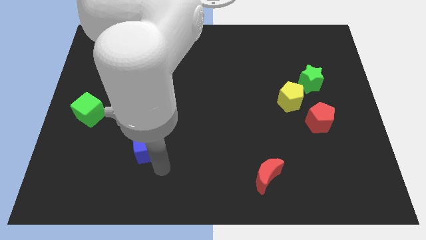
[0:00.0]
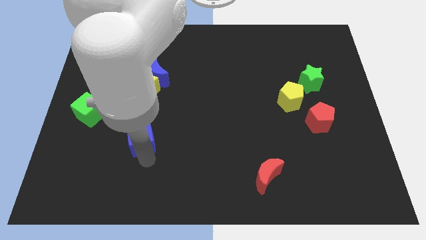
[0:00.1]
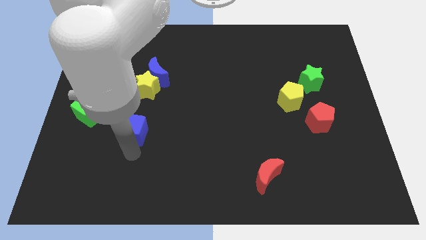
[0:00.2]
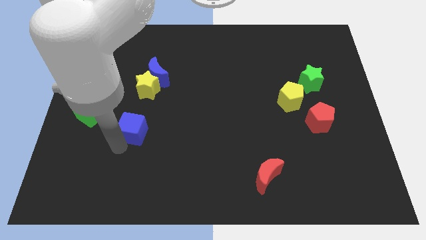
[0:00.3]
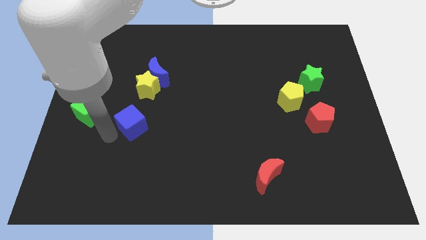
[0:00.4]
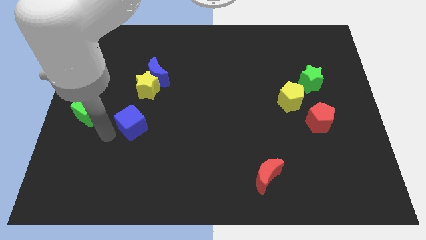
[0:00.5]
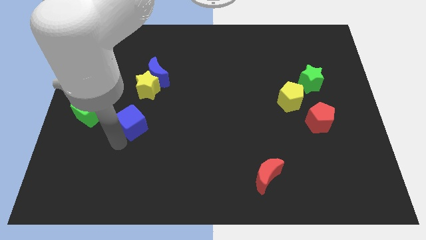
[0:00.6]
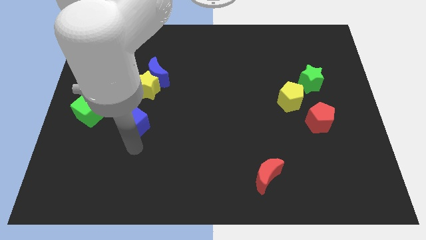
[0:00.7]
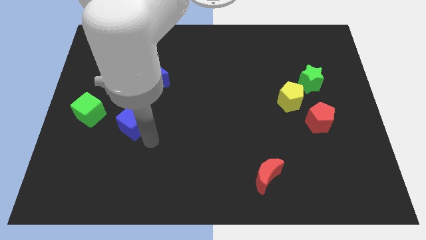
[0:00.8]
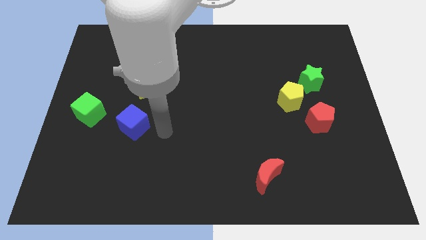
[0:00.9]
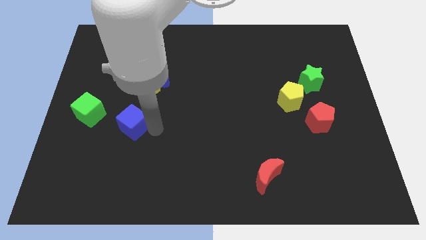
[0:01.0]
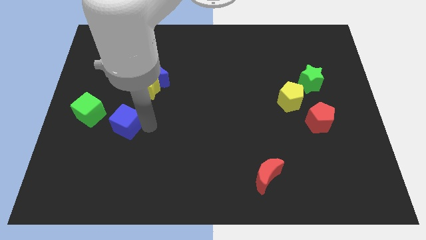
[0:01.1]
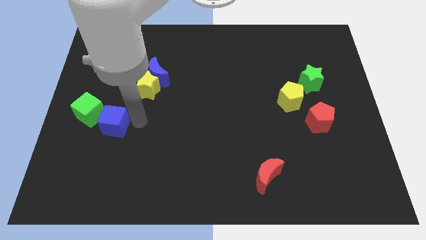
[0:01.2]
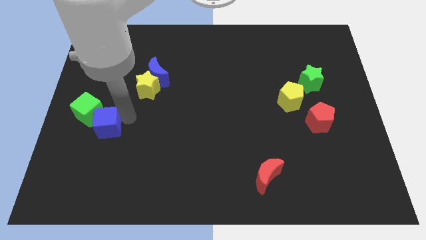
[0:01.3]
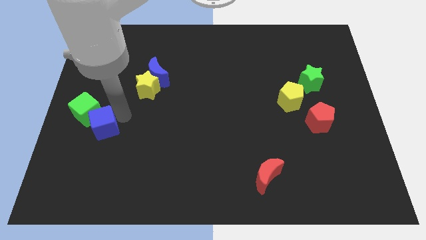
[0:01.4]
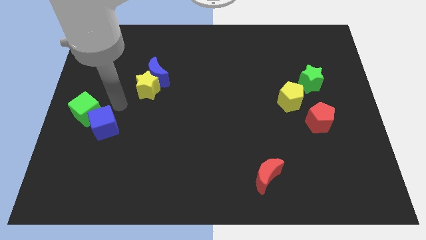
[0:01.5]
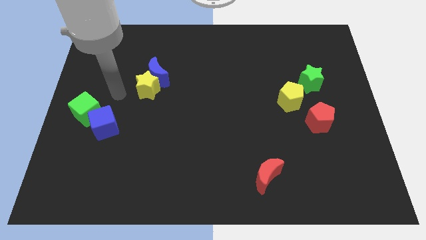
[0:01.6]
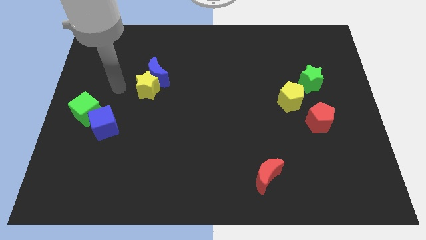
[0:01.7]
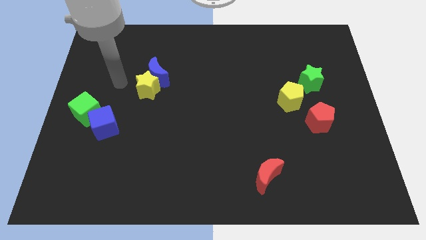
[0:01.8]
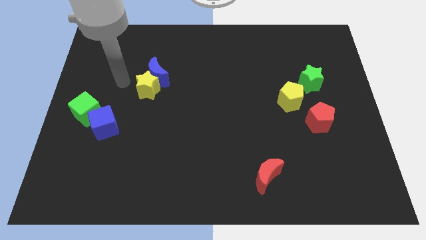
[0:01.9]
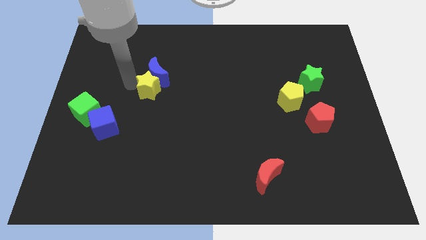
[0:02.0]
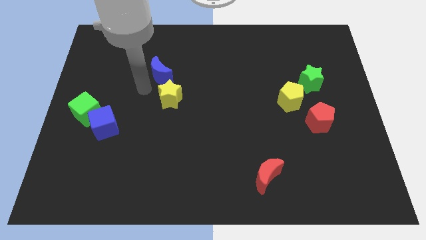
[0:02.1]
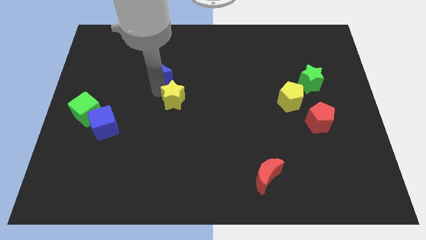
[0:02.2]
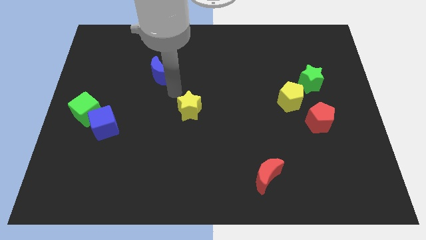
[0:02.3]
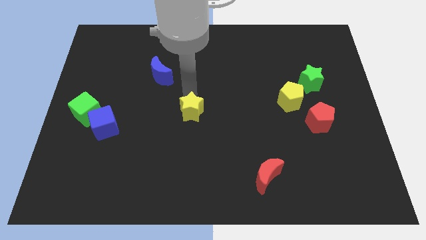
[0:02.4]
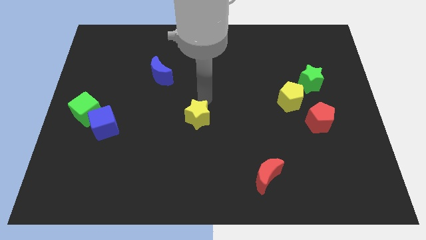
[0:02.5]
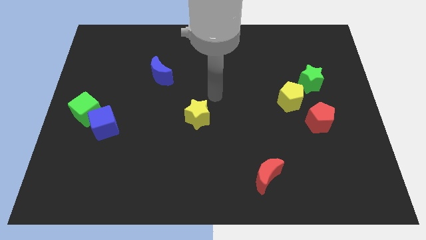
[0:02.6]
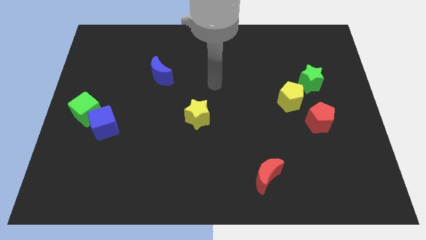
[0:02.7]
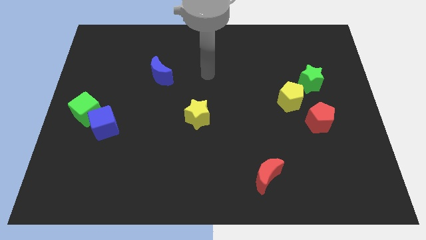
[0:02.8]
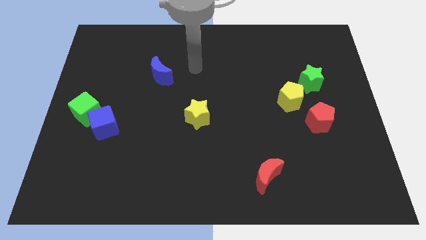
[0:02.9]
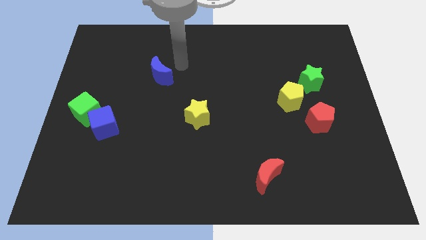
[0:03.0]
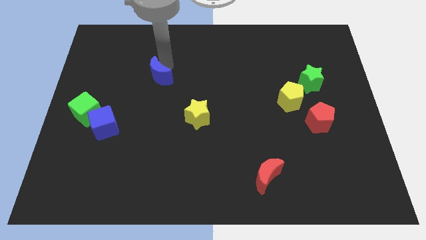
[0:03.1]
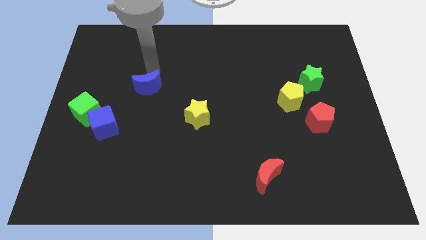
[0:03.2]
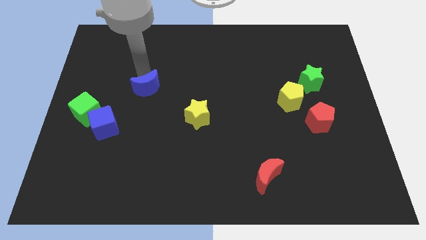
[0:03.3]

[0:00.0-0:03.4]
separate the blue moon and yellow star

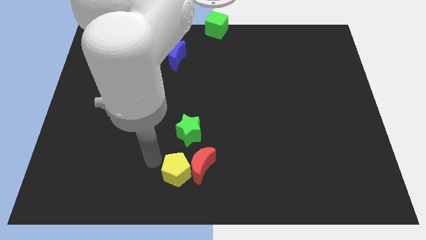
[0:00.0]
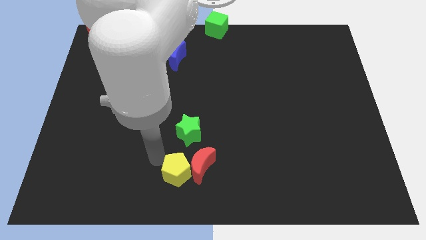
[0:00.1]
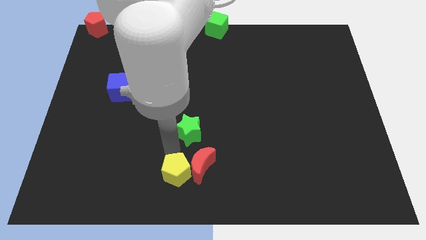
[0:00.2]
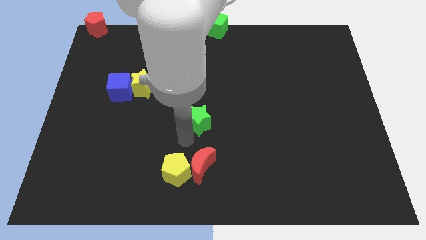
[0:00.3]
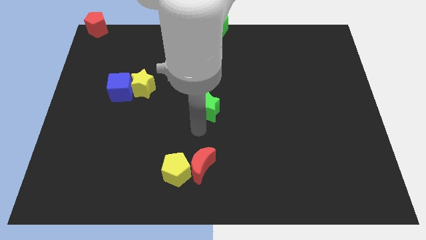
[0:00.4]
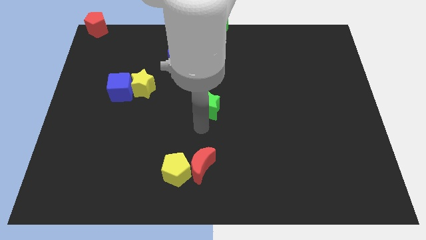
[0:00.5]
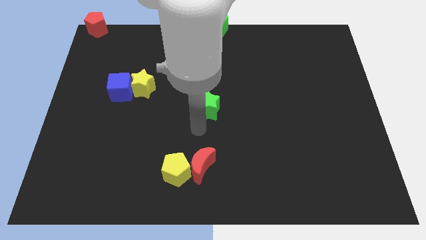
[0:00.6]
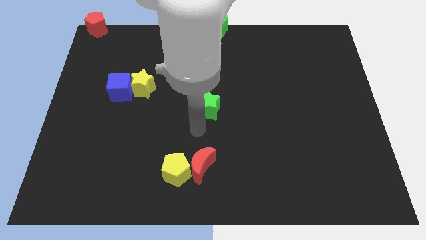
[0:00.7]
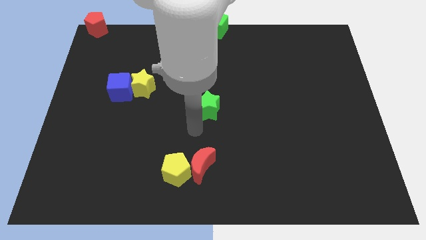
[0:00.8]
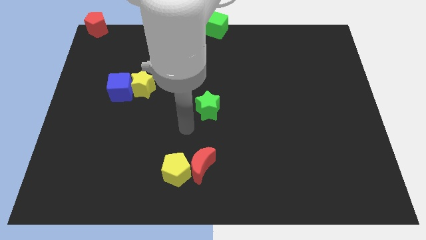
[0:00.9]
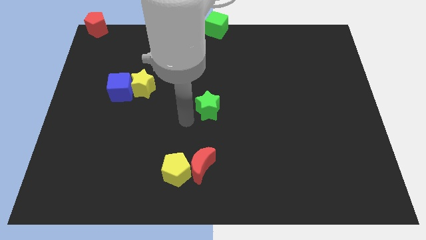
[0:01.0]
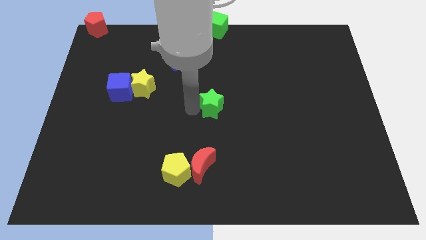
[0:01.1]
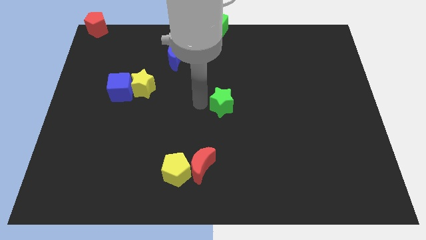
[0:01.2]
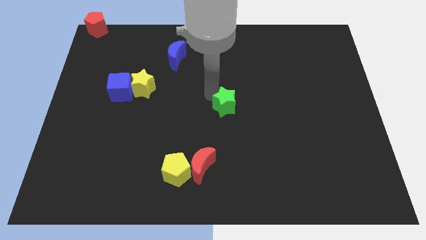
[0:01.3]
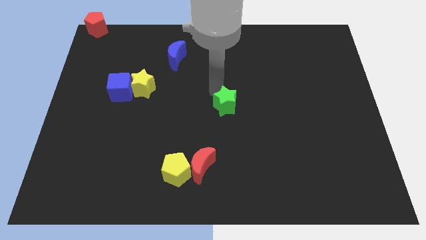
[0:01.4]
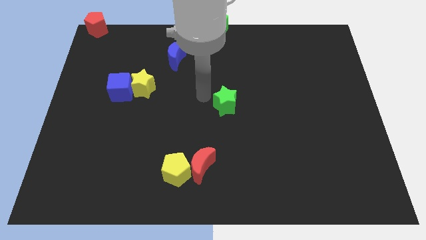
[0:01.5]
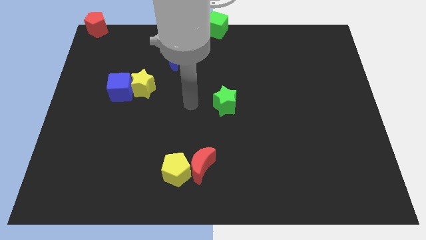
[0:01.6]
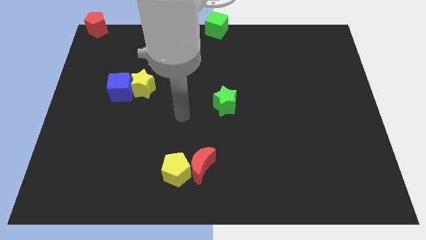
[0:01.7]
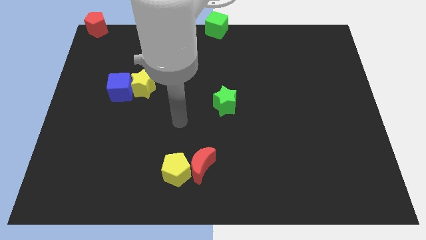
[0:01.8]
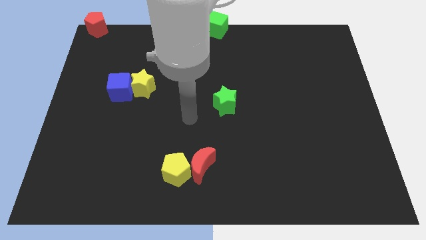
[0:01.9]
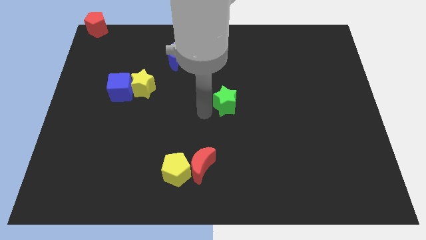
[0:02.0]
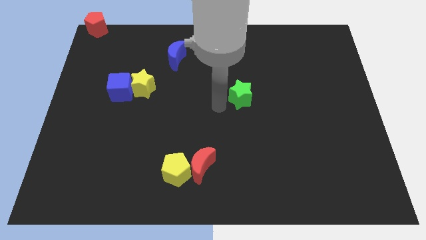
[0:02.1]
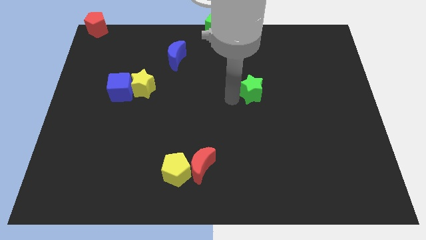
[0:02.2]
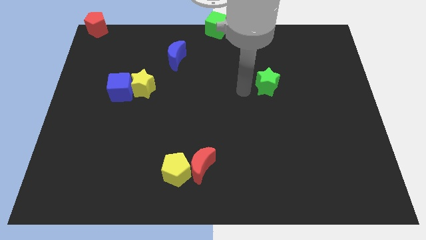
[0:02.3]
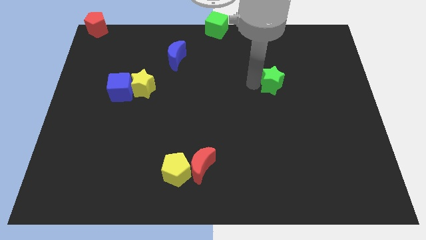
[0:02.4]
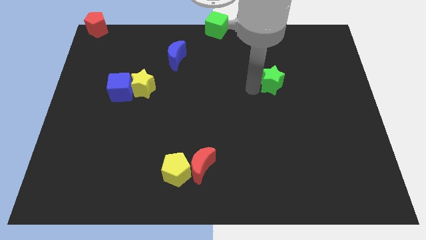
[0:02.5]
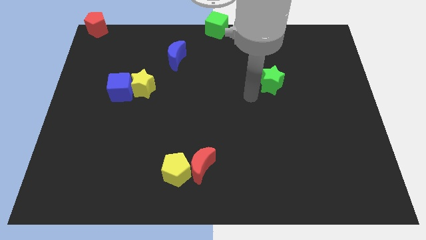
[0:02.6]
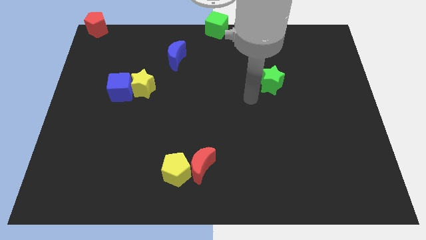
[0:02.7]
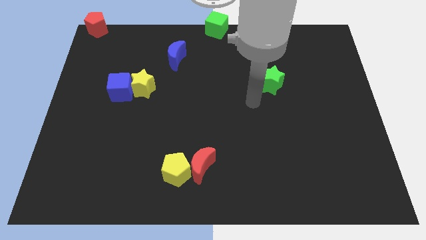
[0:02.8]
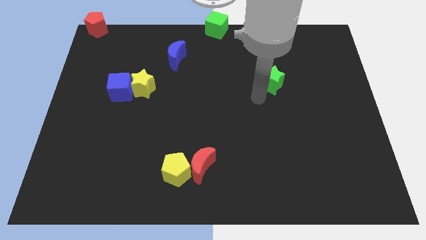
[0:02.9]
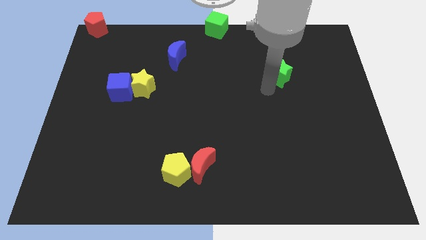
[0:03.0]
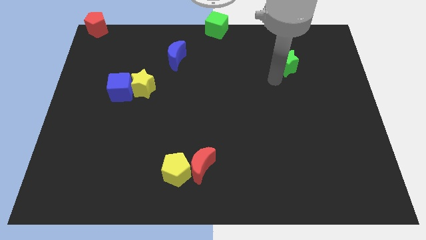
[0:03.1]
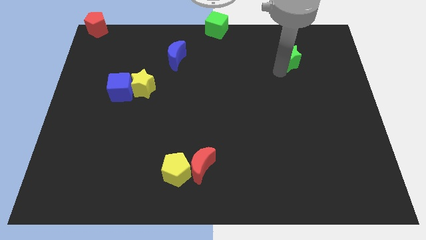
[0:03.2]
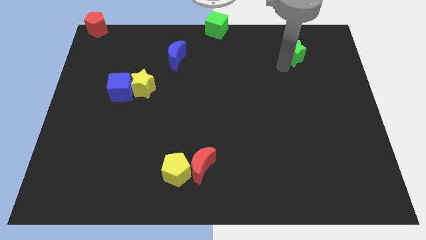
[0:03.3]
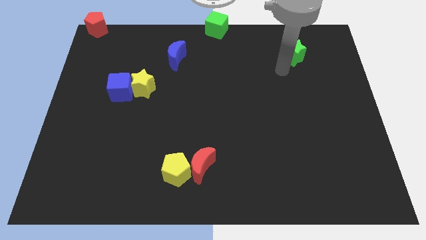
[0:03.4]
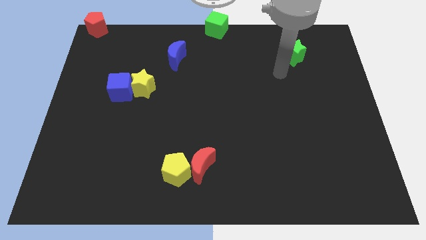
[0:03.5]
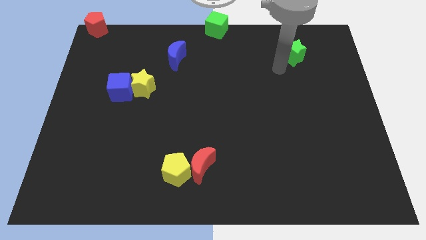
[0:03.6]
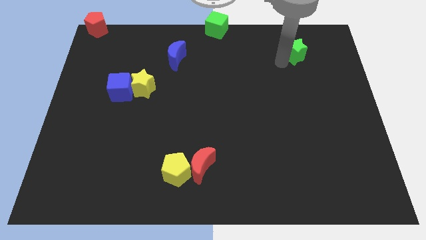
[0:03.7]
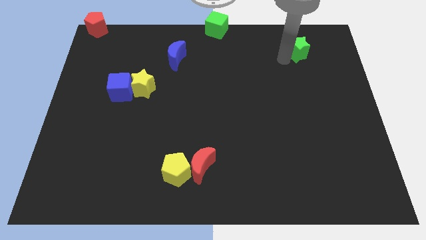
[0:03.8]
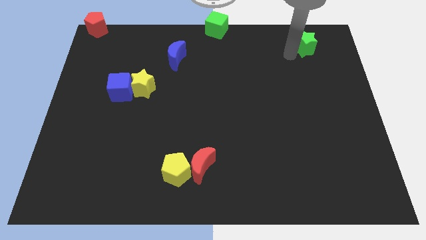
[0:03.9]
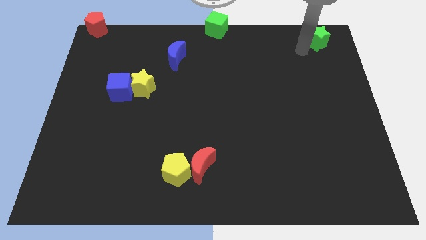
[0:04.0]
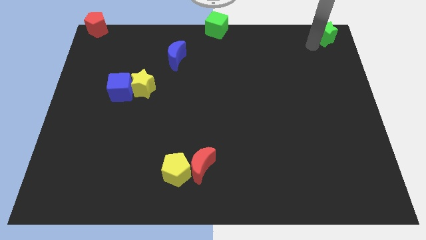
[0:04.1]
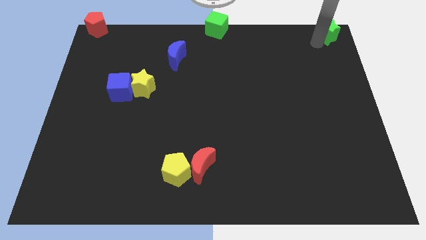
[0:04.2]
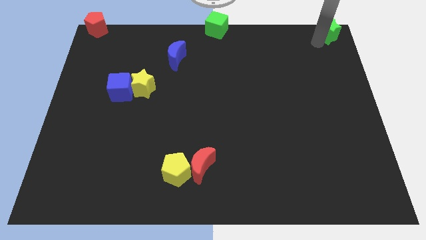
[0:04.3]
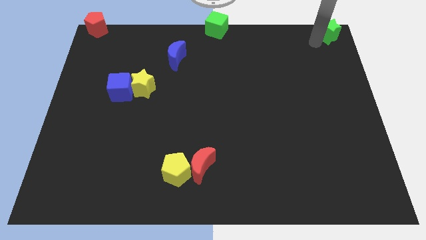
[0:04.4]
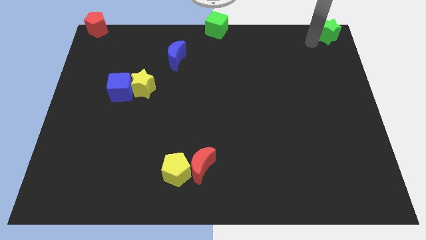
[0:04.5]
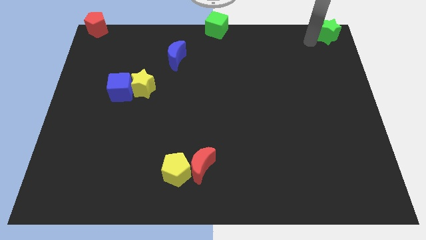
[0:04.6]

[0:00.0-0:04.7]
place the green star to the top right corner of the board

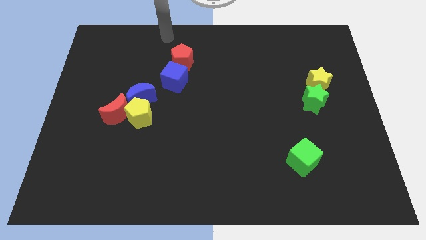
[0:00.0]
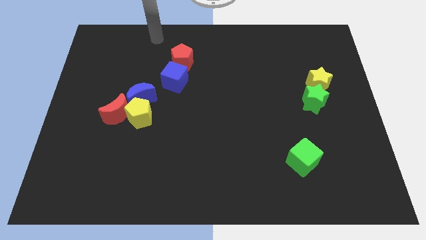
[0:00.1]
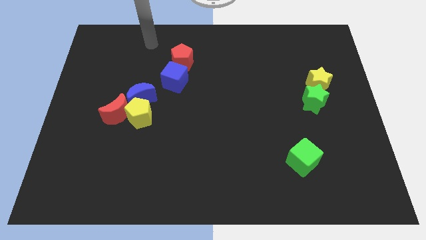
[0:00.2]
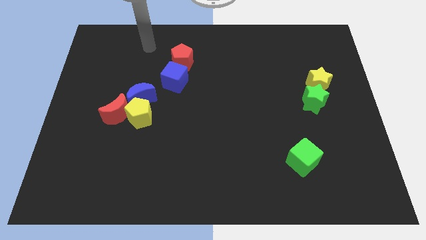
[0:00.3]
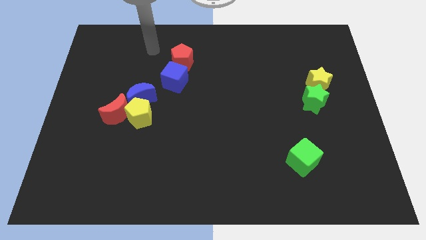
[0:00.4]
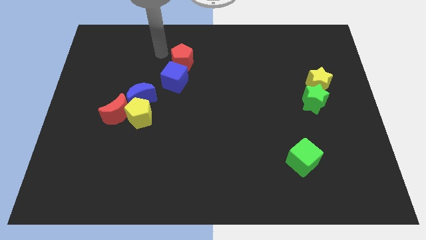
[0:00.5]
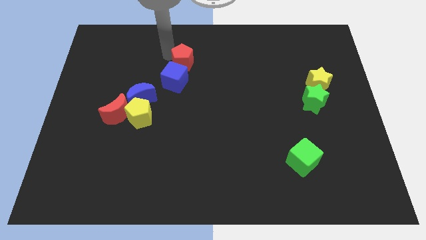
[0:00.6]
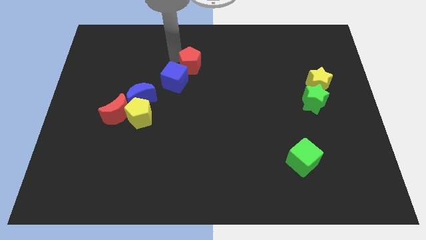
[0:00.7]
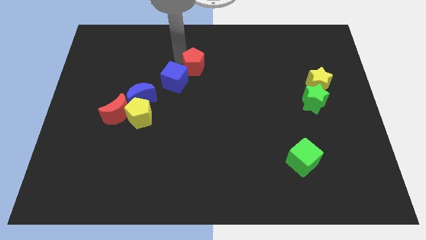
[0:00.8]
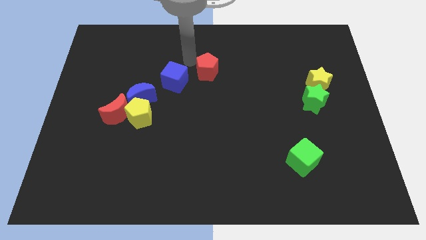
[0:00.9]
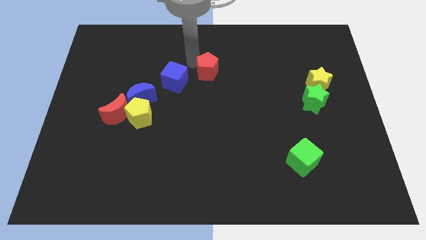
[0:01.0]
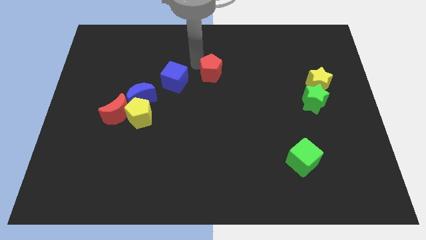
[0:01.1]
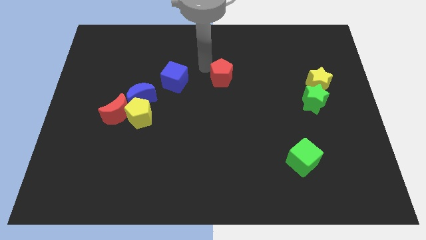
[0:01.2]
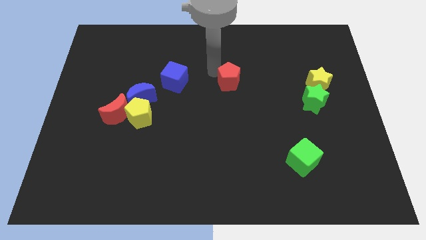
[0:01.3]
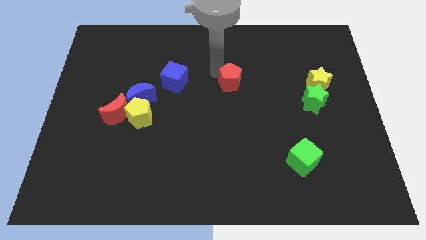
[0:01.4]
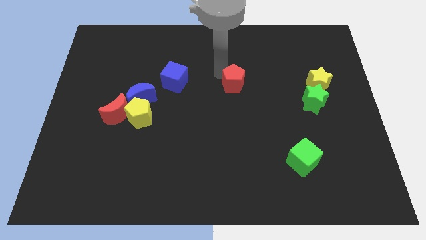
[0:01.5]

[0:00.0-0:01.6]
push red pentagon slightly towards right
